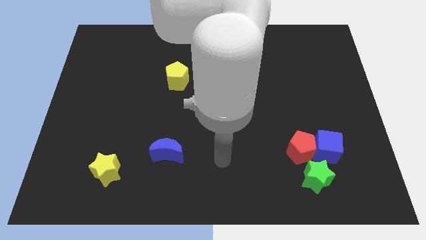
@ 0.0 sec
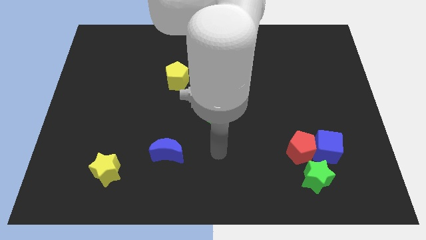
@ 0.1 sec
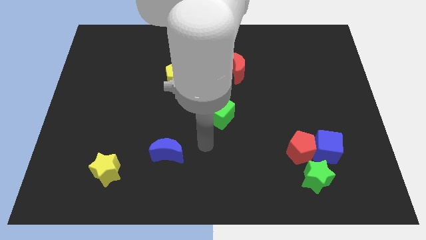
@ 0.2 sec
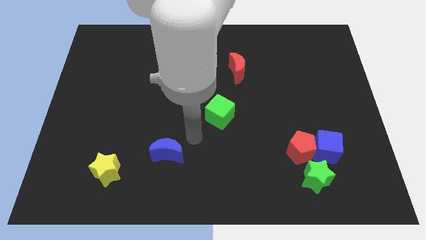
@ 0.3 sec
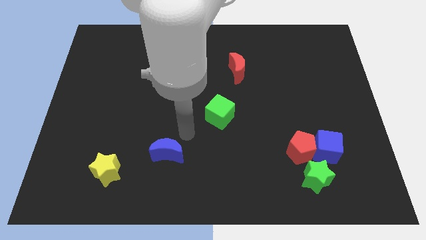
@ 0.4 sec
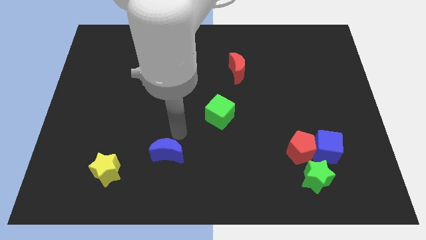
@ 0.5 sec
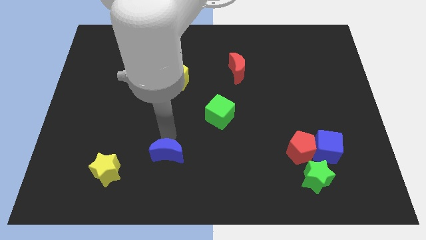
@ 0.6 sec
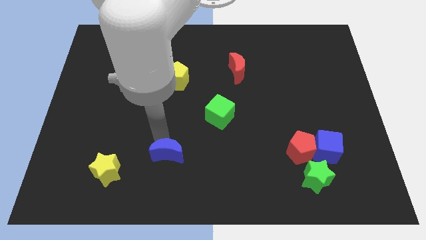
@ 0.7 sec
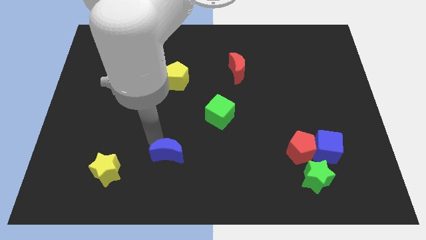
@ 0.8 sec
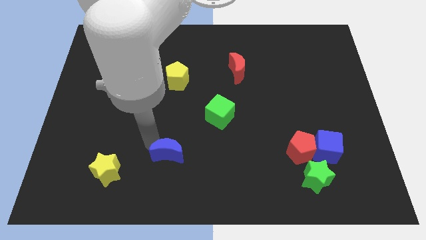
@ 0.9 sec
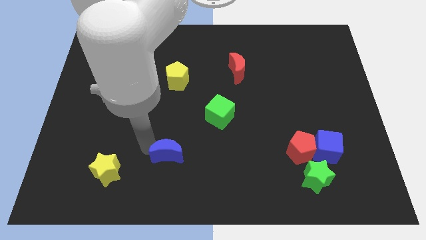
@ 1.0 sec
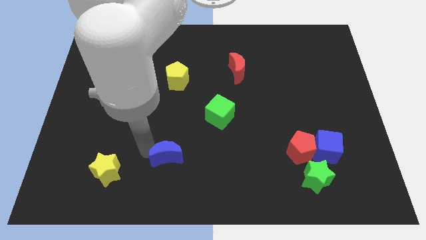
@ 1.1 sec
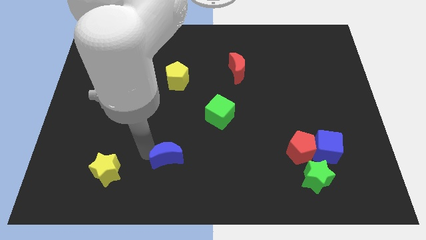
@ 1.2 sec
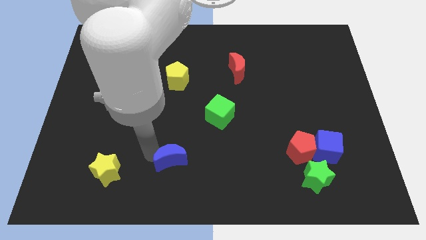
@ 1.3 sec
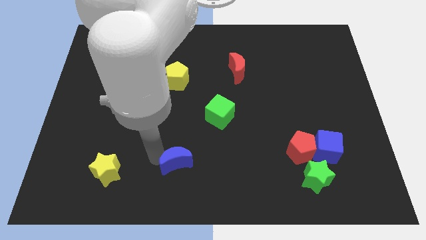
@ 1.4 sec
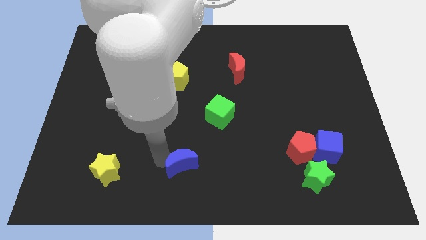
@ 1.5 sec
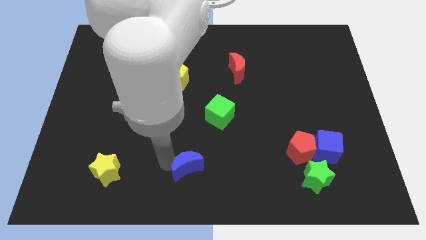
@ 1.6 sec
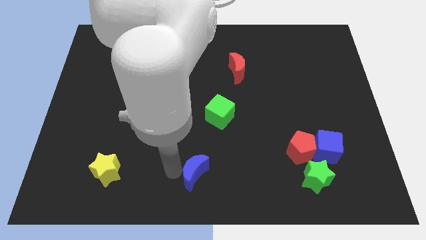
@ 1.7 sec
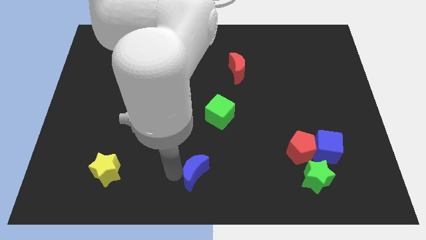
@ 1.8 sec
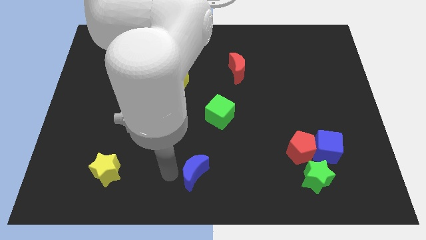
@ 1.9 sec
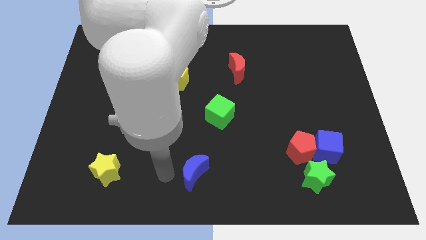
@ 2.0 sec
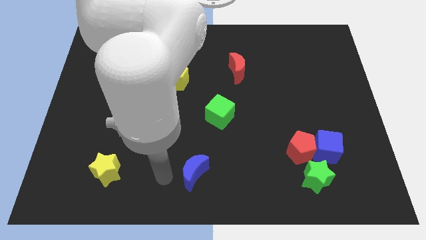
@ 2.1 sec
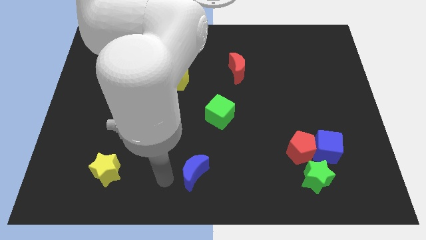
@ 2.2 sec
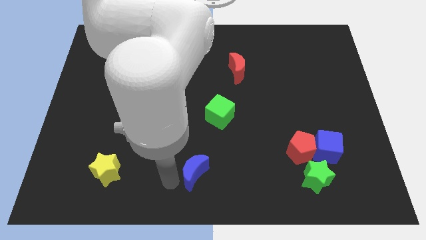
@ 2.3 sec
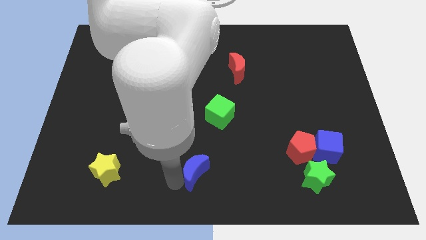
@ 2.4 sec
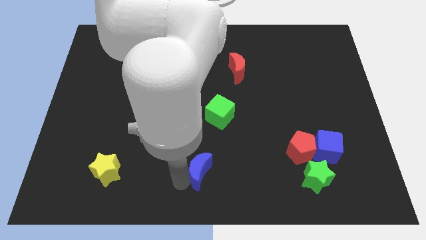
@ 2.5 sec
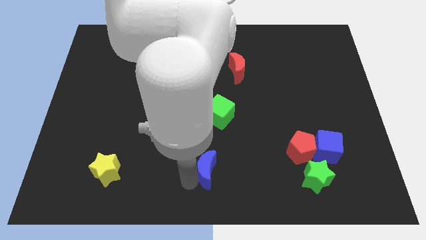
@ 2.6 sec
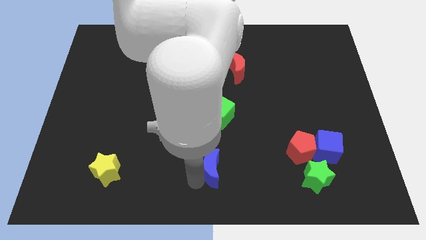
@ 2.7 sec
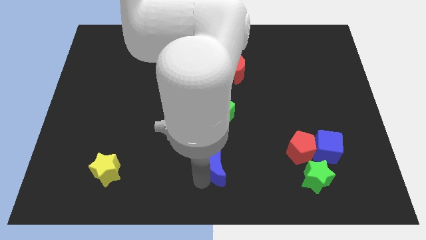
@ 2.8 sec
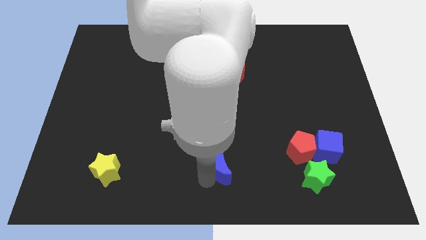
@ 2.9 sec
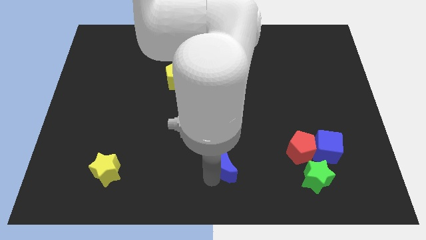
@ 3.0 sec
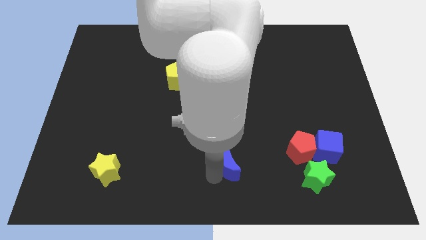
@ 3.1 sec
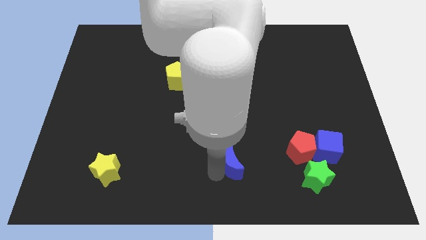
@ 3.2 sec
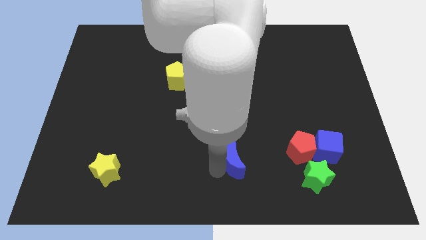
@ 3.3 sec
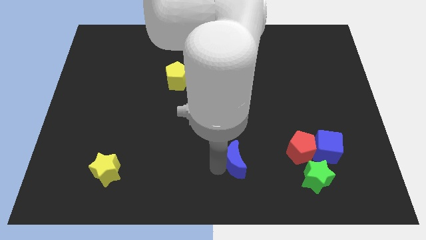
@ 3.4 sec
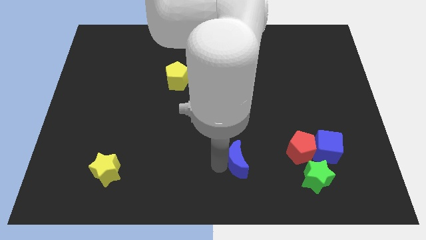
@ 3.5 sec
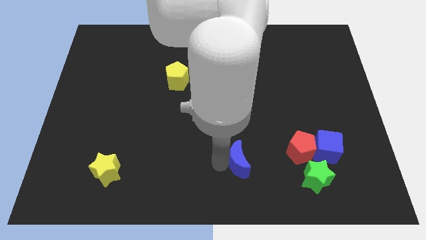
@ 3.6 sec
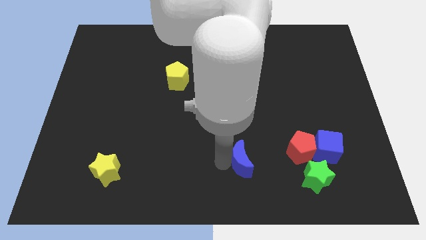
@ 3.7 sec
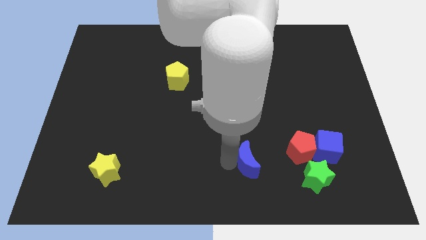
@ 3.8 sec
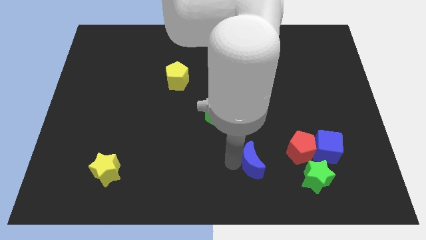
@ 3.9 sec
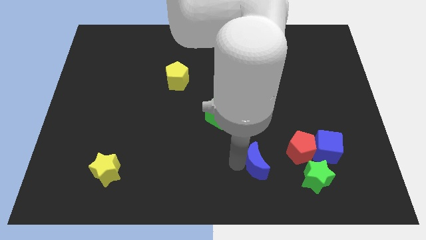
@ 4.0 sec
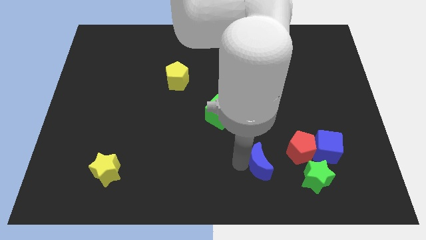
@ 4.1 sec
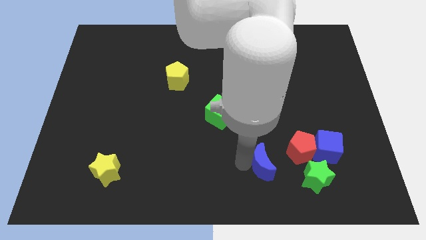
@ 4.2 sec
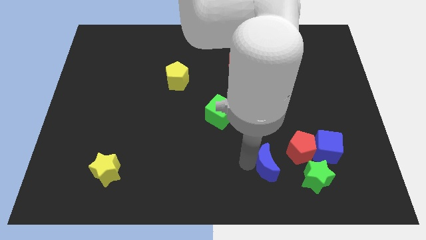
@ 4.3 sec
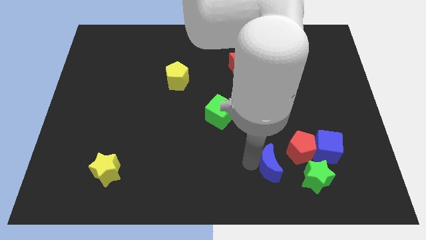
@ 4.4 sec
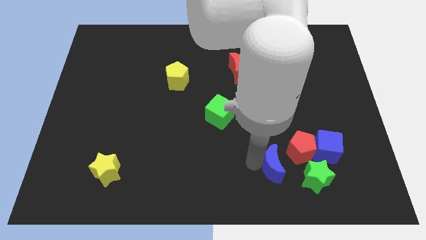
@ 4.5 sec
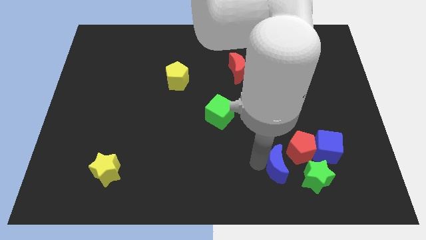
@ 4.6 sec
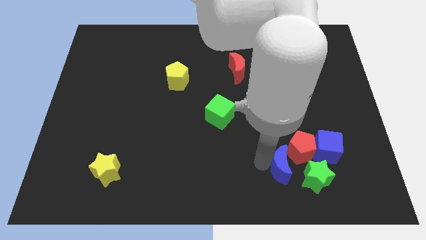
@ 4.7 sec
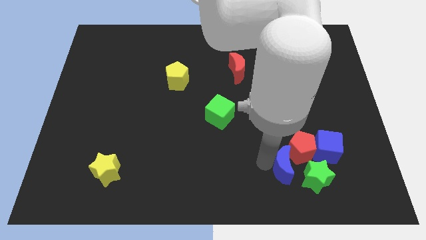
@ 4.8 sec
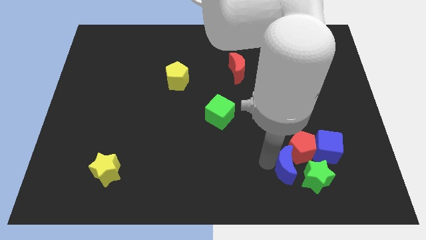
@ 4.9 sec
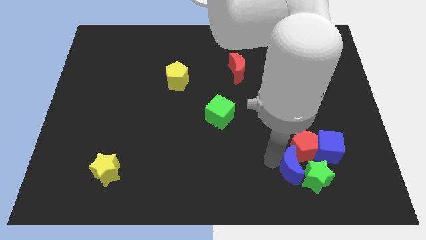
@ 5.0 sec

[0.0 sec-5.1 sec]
put the blue moon towards the red pentagon

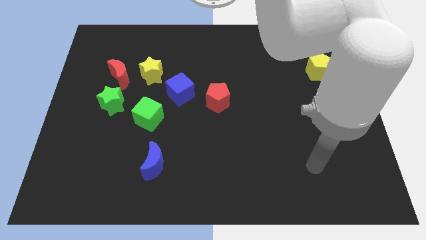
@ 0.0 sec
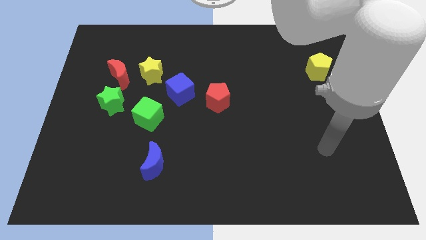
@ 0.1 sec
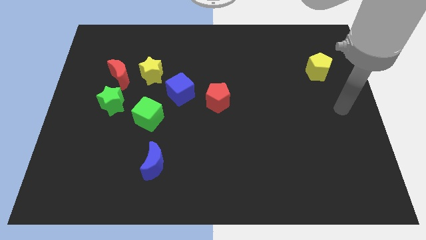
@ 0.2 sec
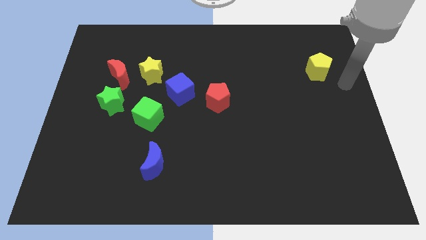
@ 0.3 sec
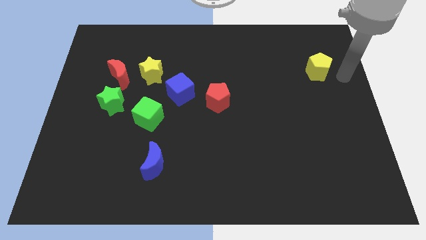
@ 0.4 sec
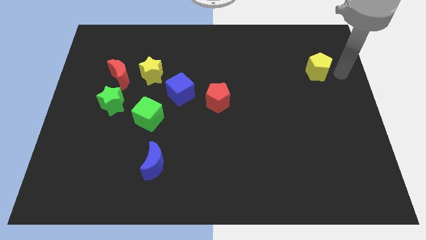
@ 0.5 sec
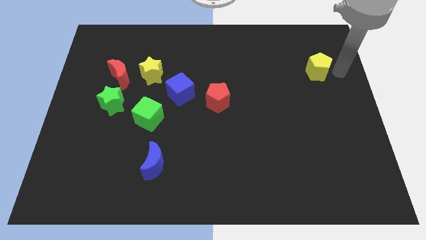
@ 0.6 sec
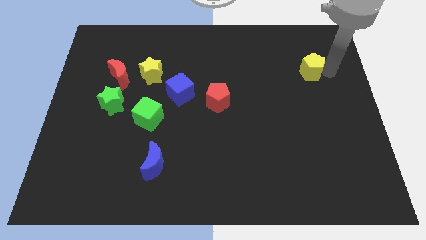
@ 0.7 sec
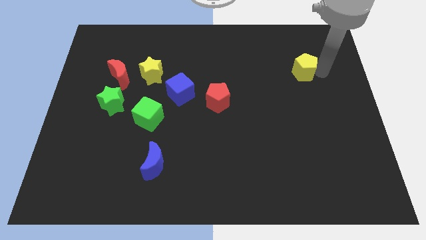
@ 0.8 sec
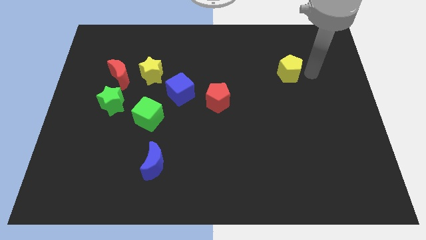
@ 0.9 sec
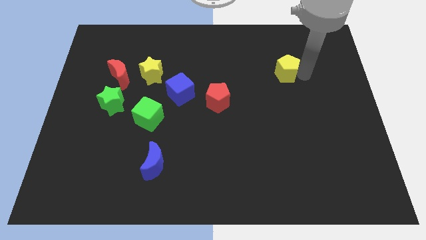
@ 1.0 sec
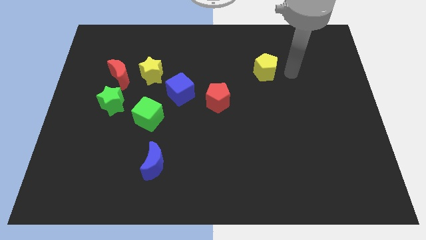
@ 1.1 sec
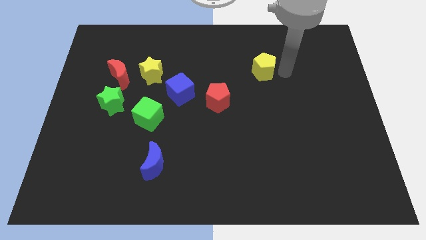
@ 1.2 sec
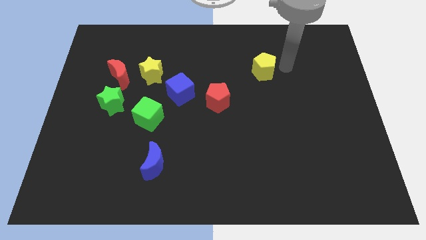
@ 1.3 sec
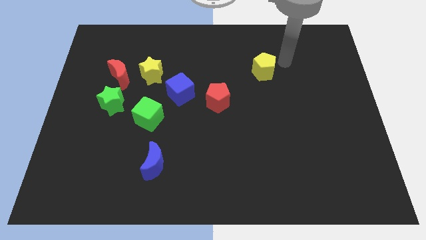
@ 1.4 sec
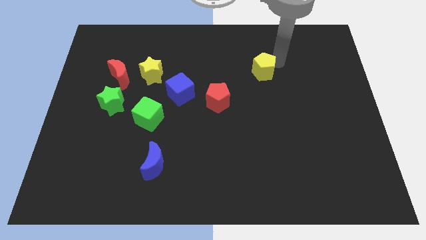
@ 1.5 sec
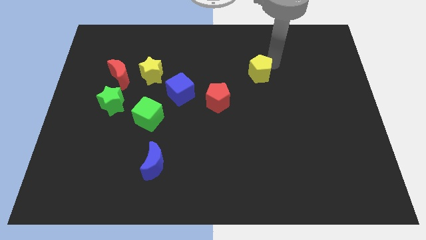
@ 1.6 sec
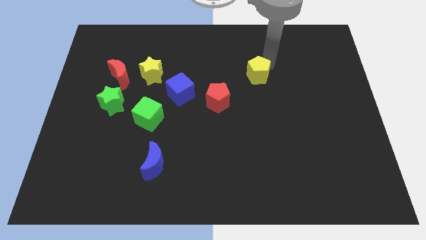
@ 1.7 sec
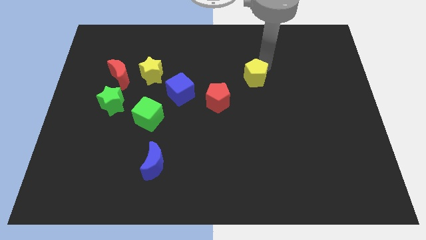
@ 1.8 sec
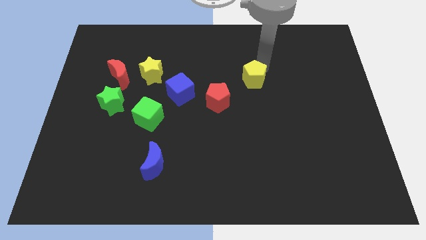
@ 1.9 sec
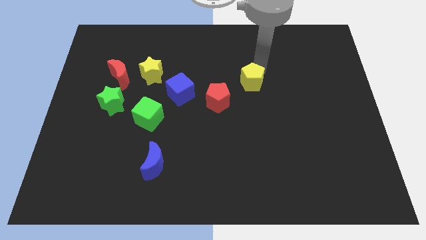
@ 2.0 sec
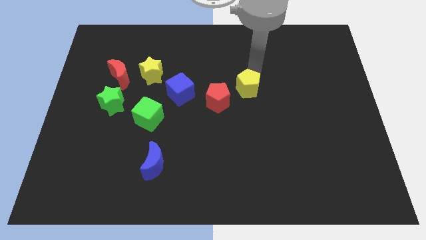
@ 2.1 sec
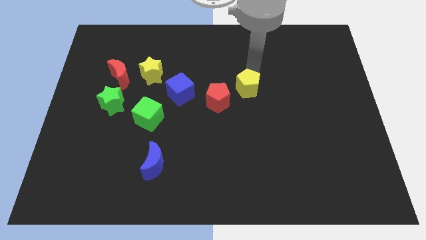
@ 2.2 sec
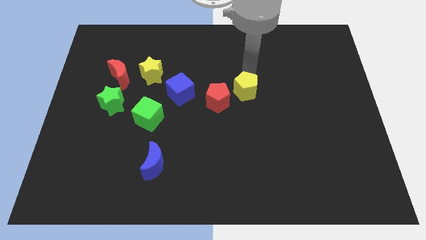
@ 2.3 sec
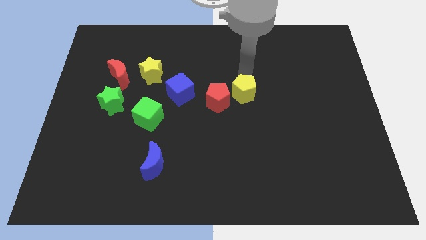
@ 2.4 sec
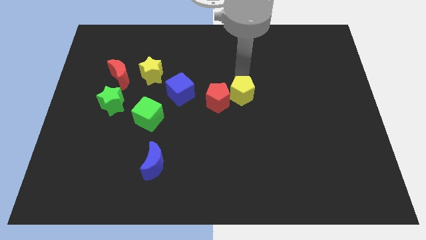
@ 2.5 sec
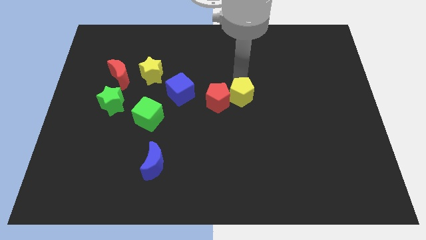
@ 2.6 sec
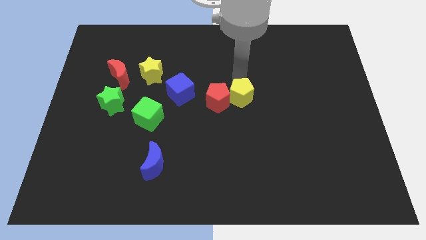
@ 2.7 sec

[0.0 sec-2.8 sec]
move the yellow pentagon close to the red pentagon

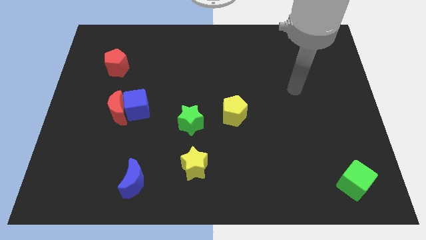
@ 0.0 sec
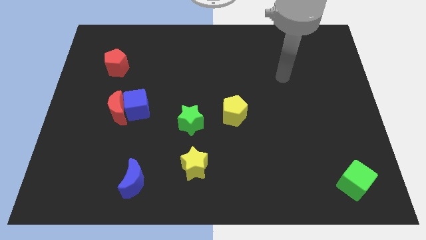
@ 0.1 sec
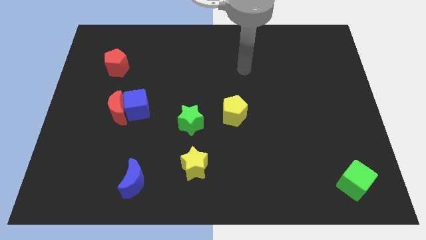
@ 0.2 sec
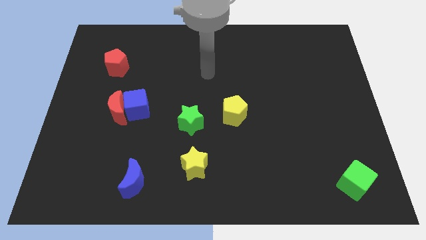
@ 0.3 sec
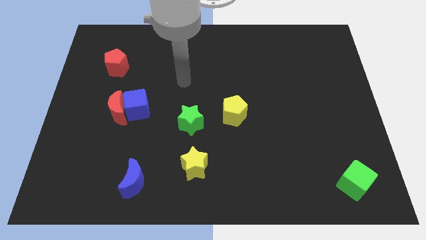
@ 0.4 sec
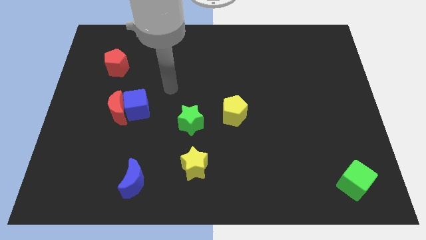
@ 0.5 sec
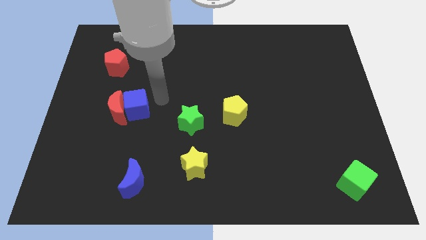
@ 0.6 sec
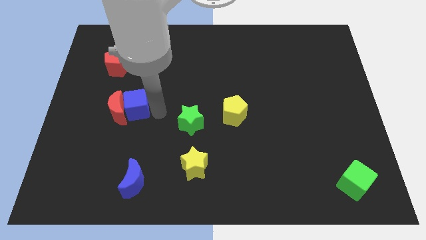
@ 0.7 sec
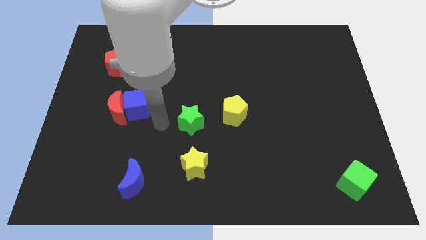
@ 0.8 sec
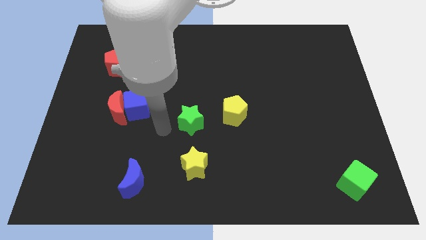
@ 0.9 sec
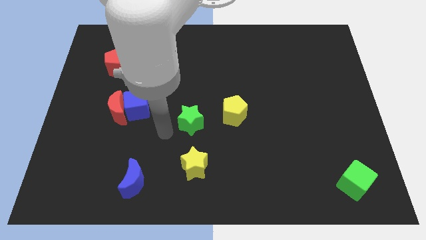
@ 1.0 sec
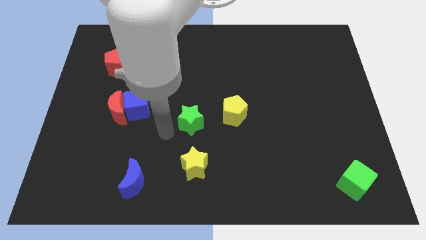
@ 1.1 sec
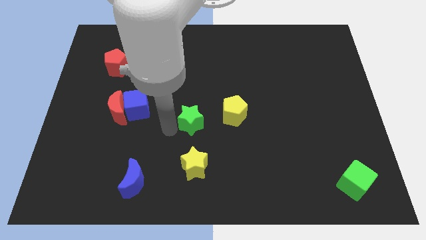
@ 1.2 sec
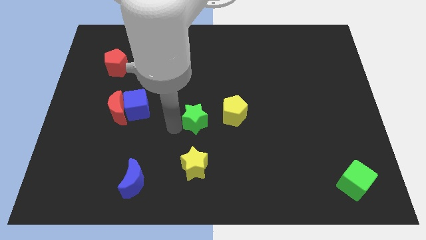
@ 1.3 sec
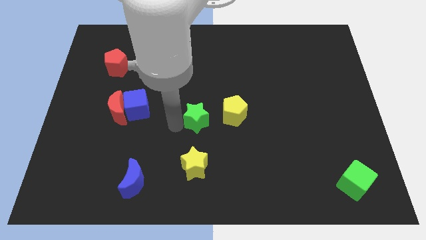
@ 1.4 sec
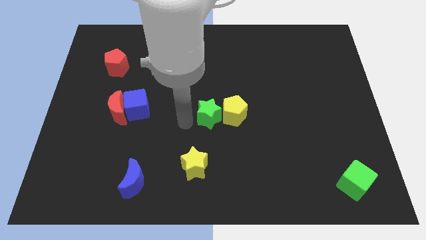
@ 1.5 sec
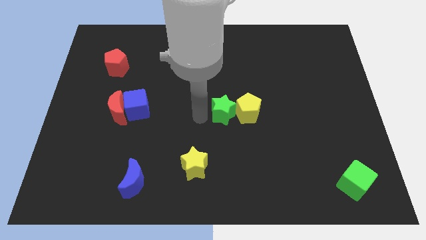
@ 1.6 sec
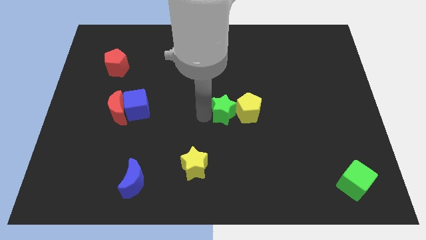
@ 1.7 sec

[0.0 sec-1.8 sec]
slide the green star to the yellow pentagon
